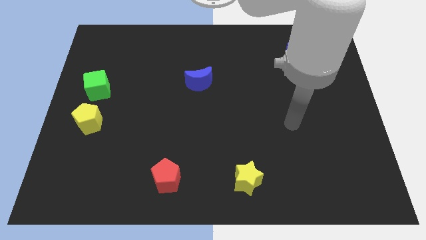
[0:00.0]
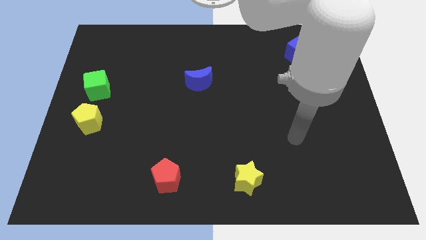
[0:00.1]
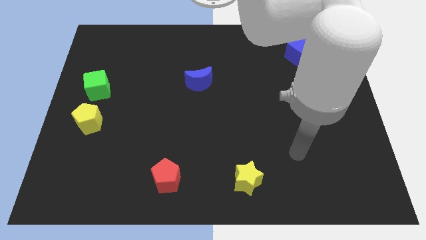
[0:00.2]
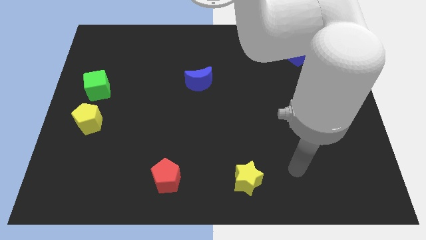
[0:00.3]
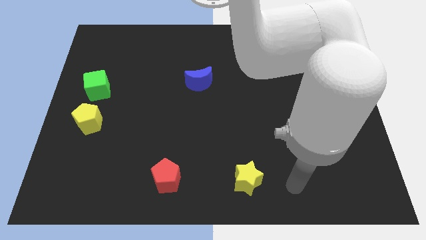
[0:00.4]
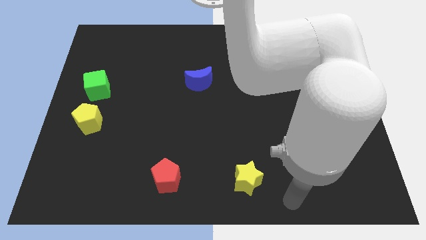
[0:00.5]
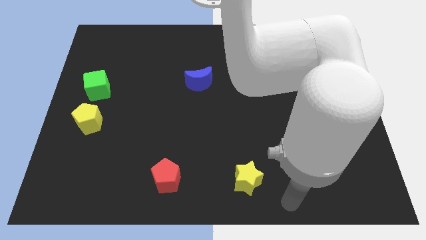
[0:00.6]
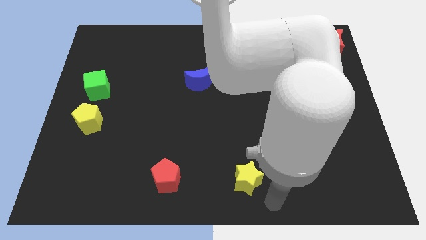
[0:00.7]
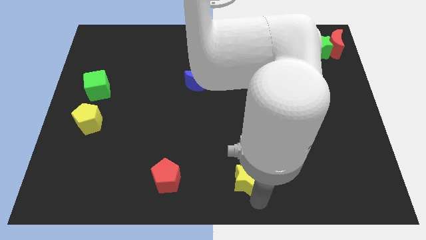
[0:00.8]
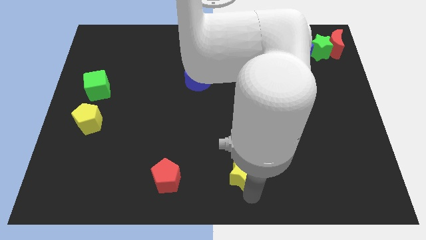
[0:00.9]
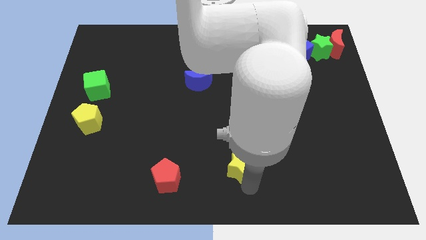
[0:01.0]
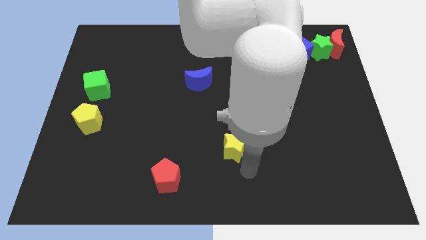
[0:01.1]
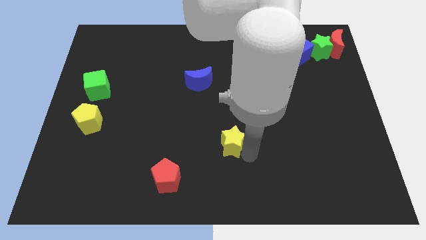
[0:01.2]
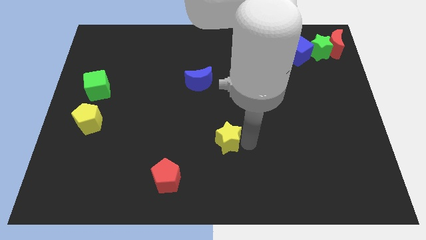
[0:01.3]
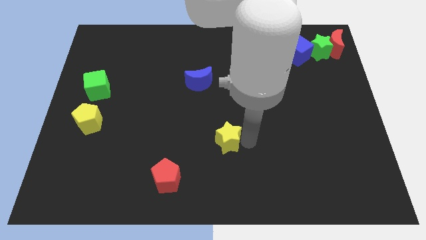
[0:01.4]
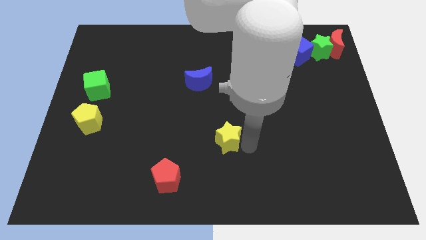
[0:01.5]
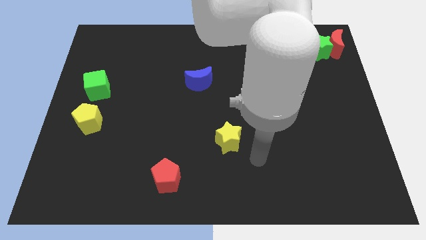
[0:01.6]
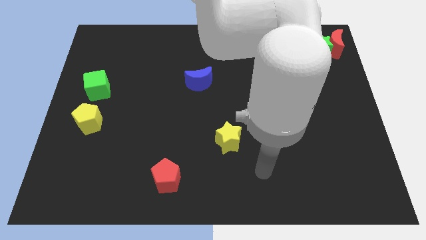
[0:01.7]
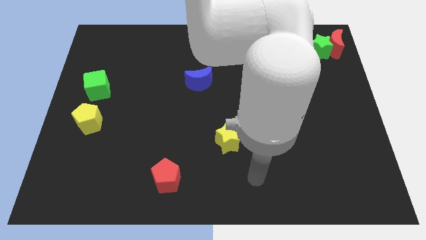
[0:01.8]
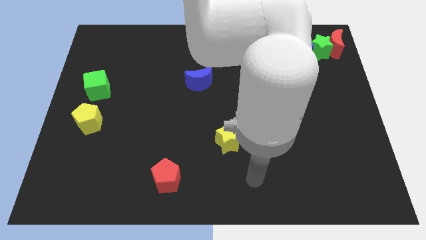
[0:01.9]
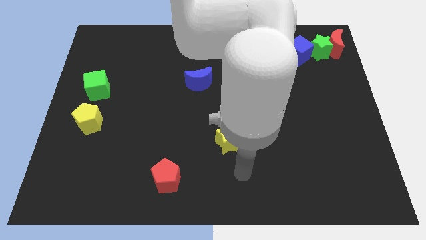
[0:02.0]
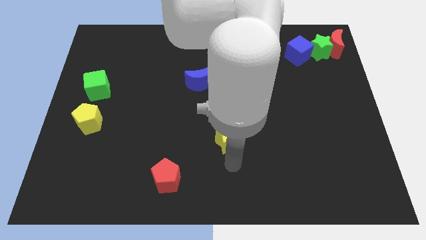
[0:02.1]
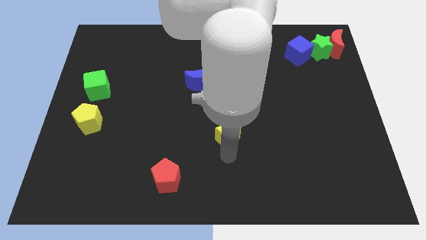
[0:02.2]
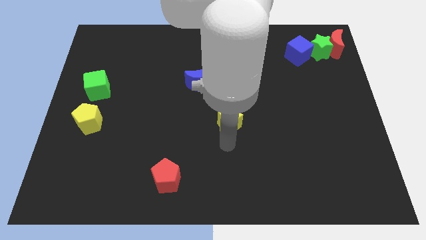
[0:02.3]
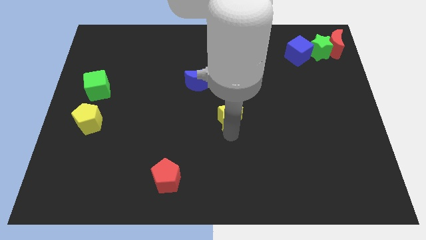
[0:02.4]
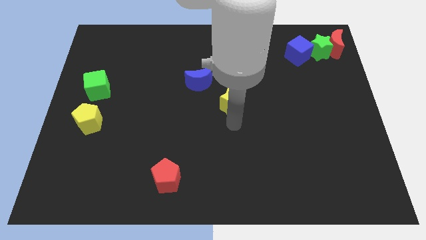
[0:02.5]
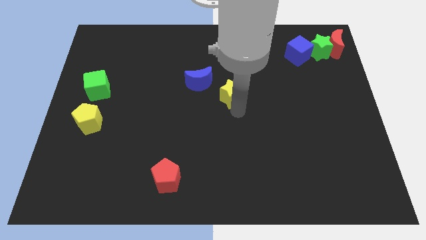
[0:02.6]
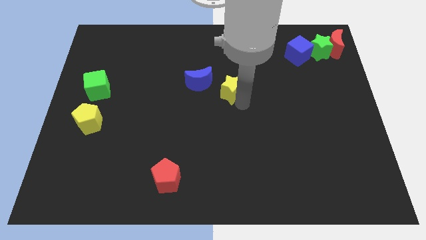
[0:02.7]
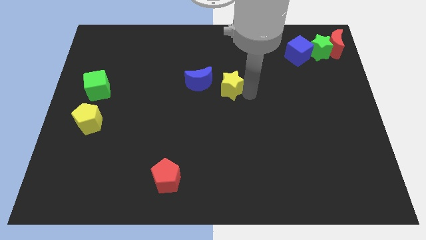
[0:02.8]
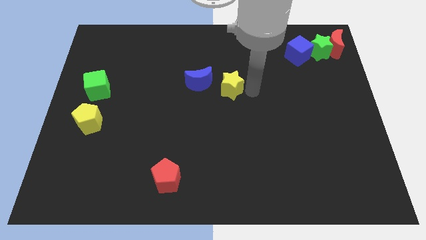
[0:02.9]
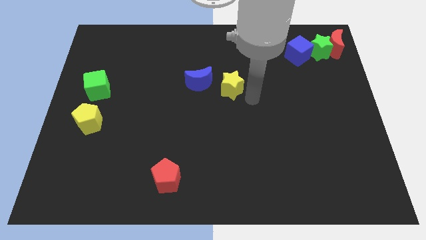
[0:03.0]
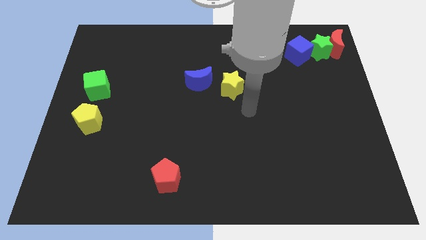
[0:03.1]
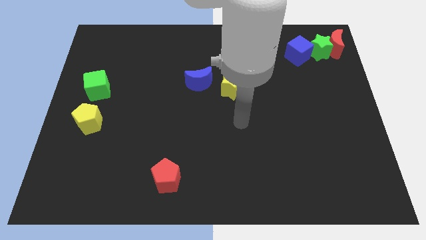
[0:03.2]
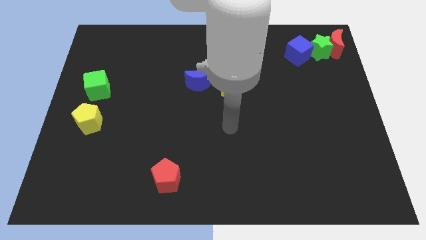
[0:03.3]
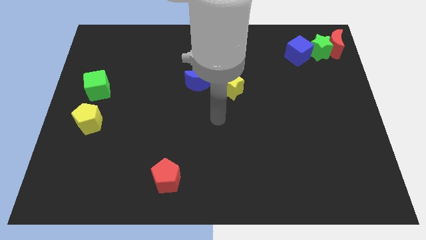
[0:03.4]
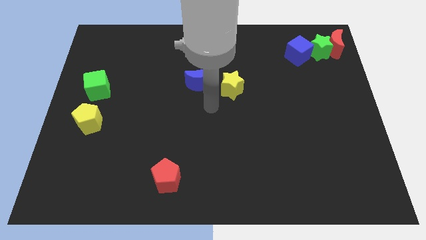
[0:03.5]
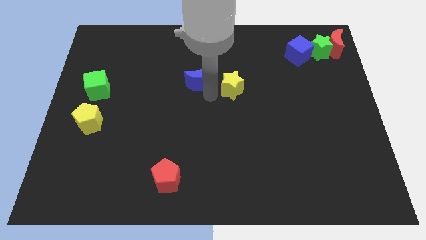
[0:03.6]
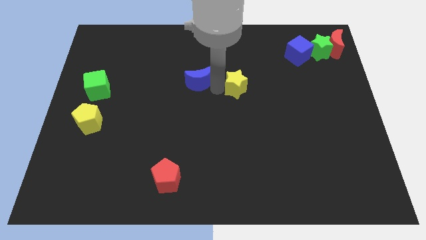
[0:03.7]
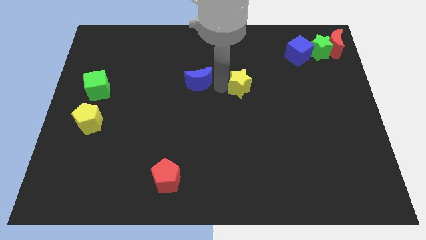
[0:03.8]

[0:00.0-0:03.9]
move the yellow star to the right of the blue crescent

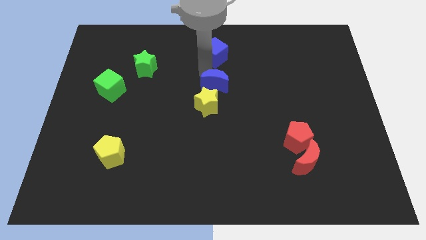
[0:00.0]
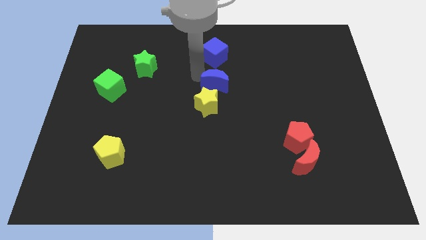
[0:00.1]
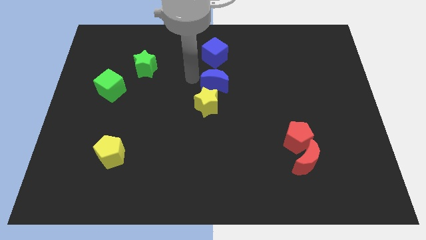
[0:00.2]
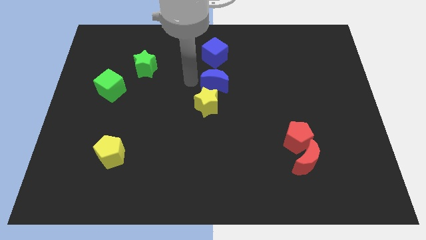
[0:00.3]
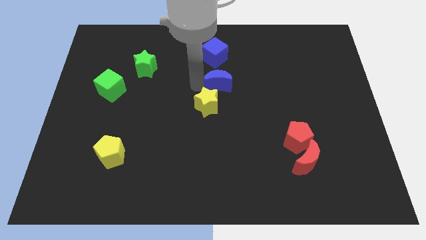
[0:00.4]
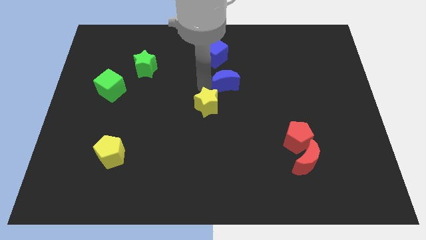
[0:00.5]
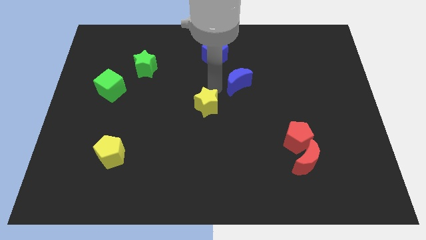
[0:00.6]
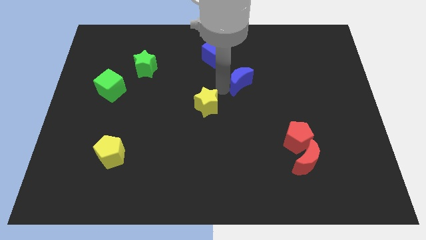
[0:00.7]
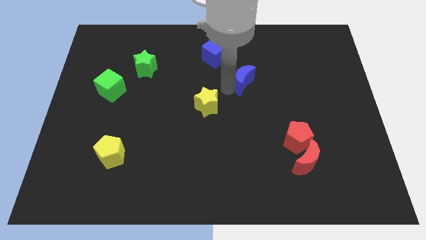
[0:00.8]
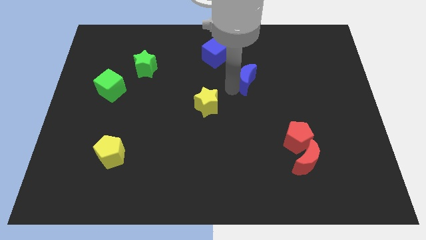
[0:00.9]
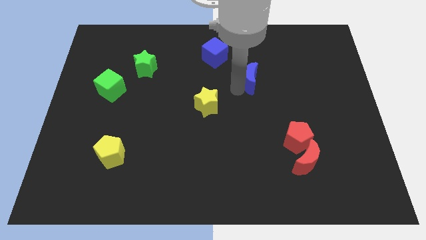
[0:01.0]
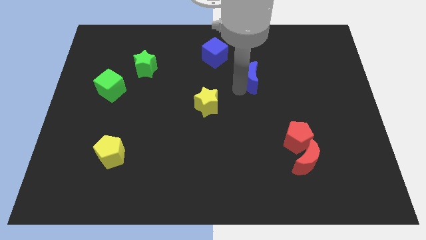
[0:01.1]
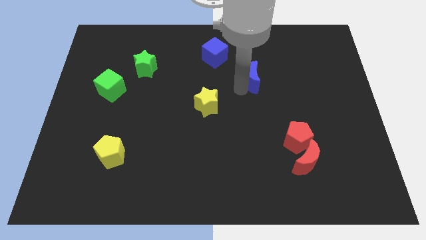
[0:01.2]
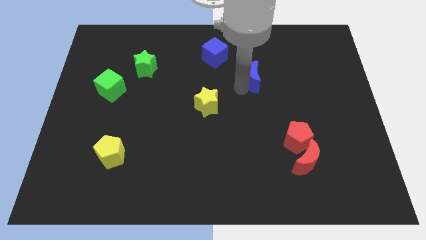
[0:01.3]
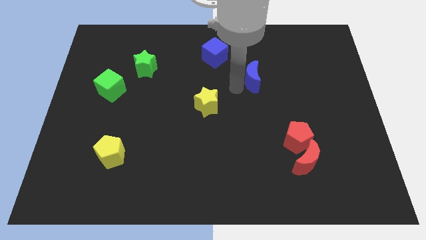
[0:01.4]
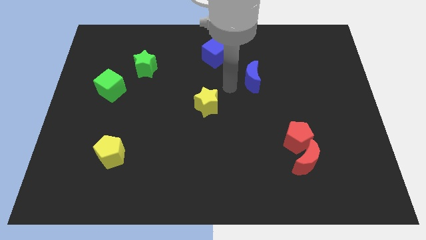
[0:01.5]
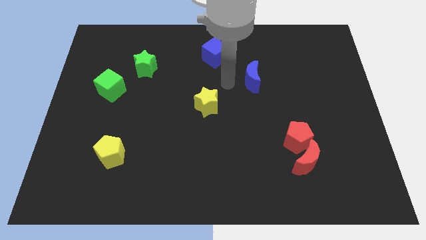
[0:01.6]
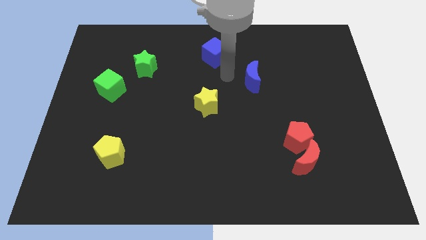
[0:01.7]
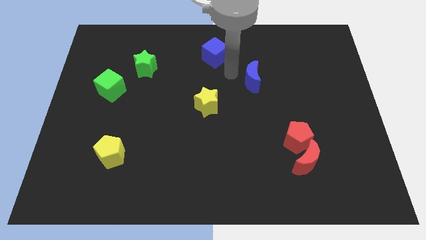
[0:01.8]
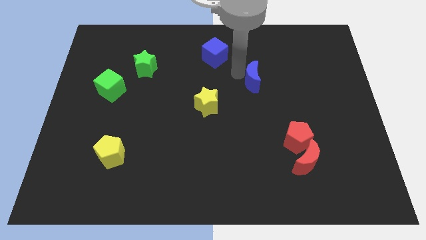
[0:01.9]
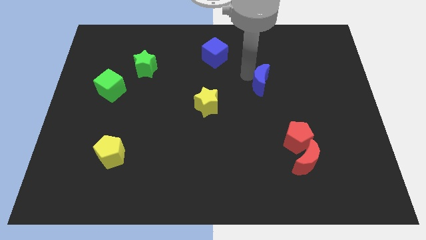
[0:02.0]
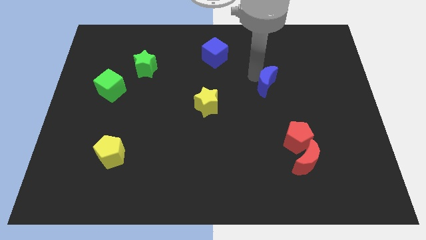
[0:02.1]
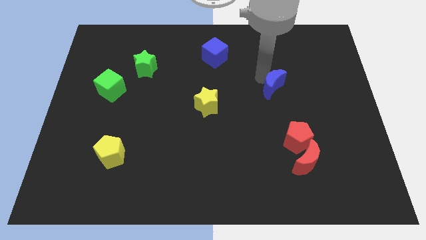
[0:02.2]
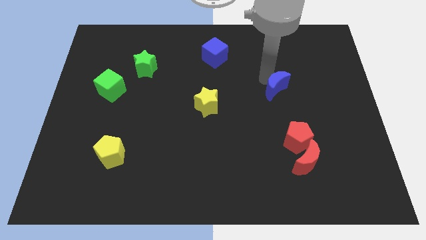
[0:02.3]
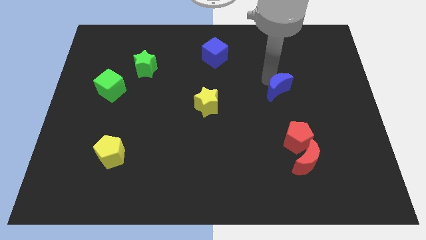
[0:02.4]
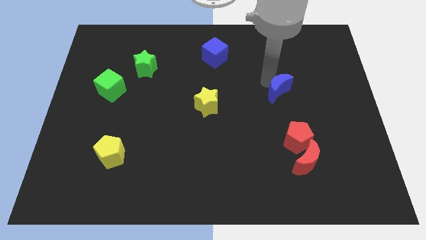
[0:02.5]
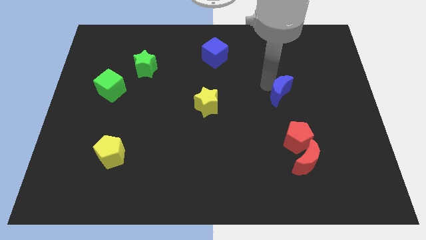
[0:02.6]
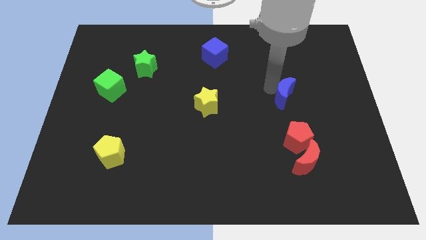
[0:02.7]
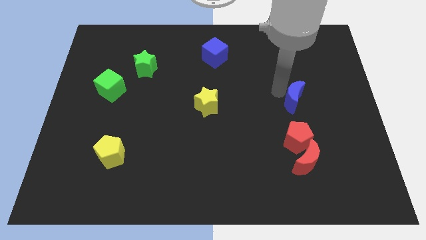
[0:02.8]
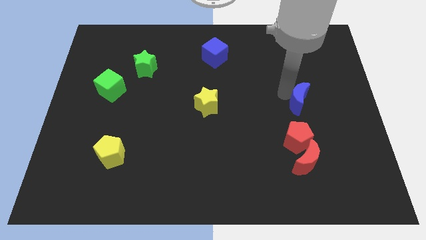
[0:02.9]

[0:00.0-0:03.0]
put the blue crescent above the red pentagon

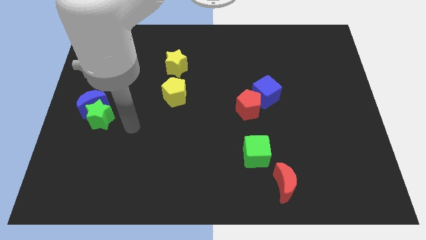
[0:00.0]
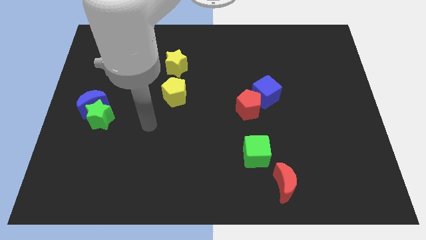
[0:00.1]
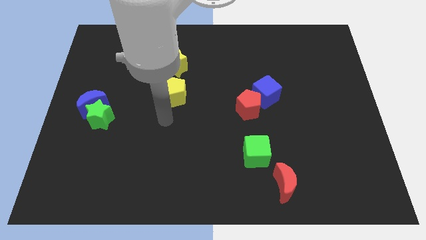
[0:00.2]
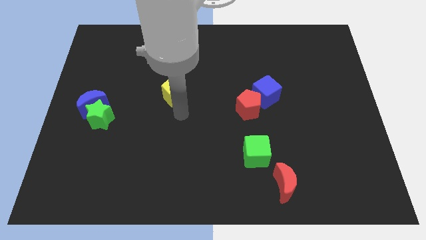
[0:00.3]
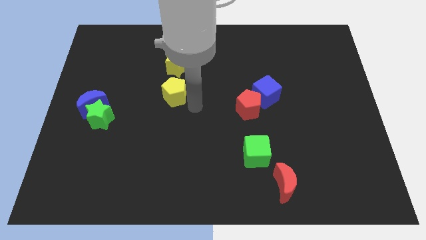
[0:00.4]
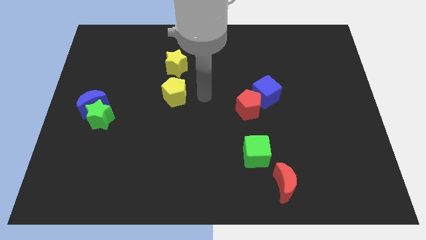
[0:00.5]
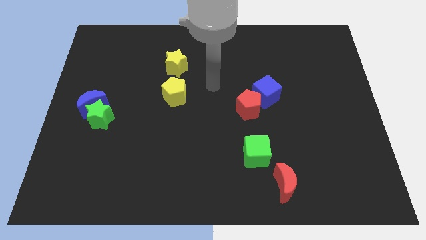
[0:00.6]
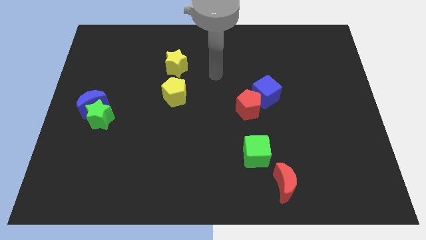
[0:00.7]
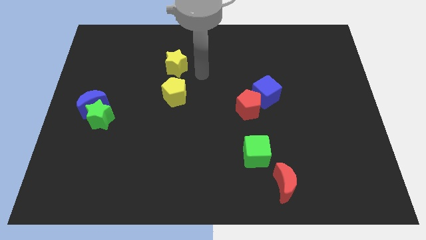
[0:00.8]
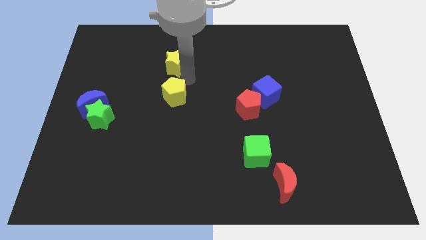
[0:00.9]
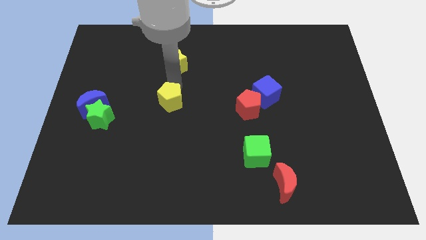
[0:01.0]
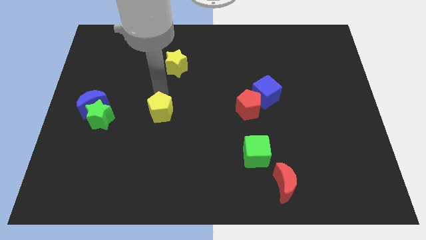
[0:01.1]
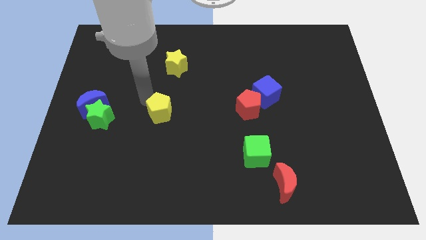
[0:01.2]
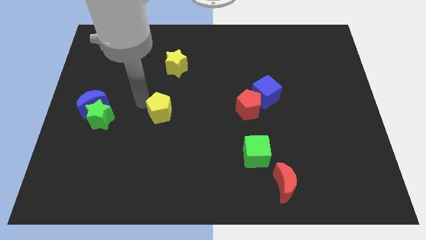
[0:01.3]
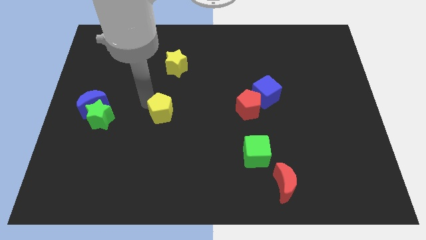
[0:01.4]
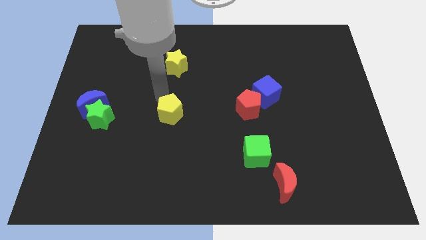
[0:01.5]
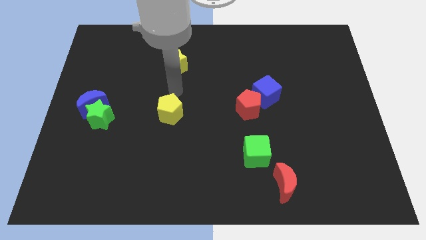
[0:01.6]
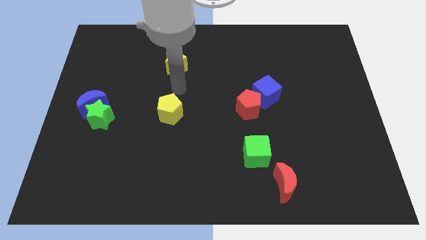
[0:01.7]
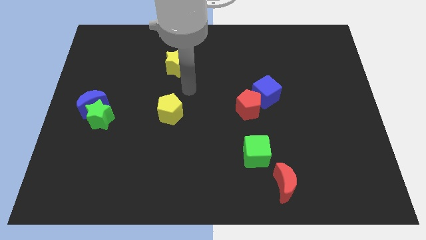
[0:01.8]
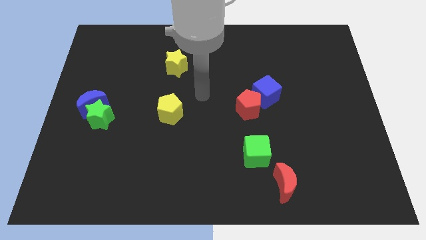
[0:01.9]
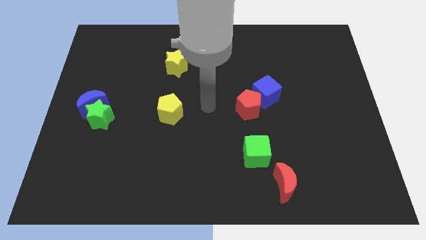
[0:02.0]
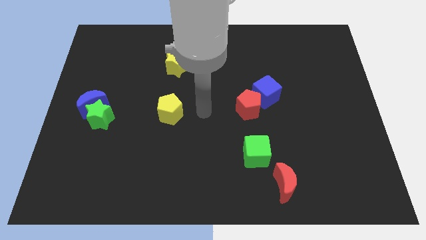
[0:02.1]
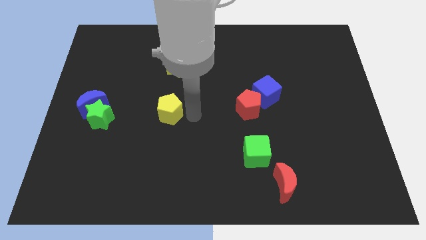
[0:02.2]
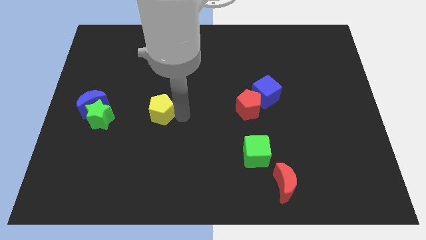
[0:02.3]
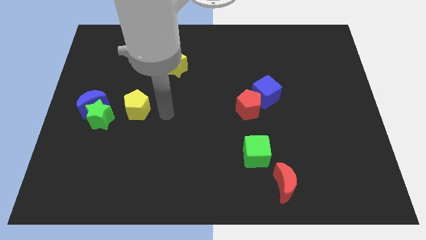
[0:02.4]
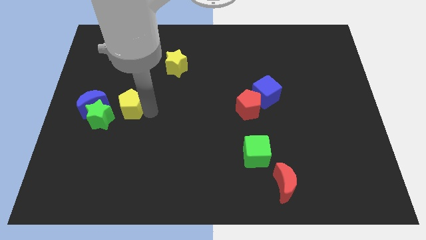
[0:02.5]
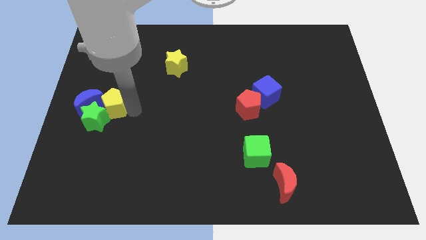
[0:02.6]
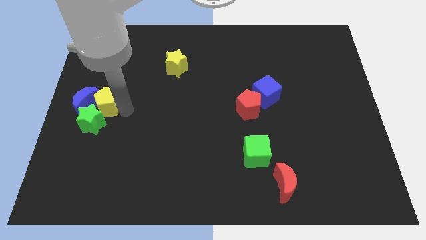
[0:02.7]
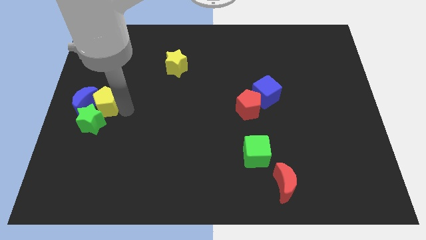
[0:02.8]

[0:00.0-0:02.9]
push the yellow pentagon into blue moon
